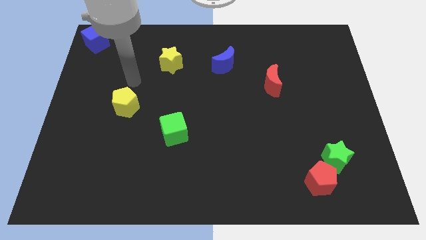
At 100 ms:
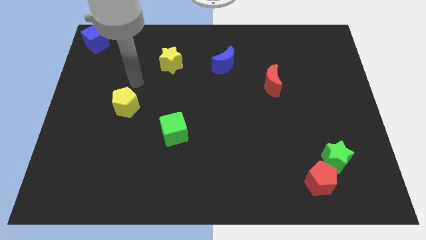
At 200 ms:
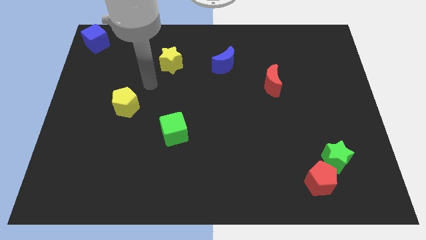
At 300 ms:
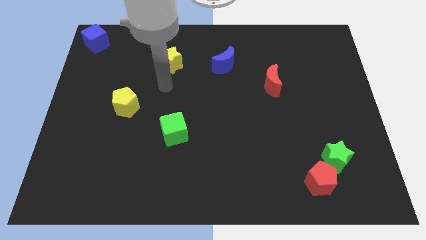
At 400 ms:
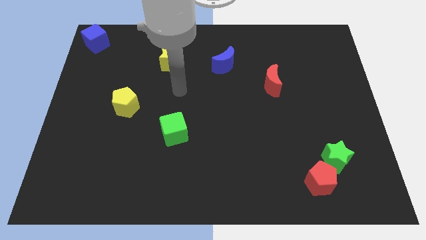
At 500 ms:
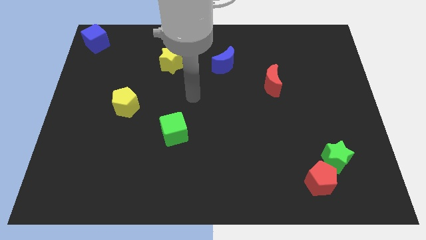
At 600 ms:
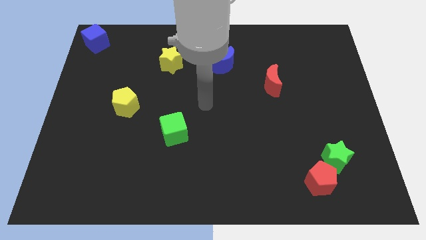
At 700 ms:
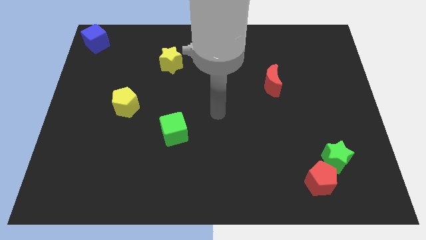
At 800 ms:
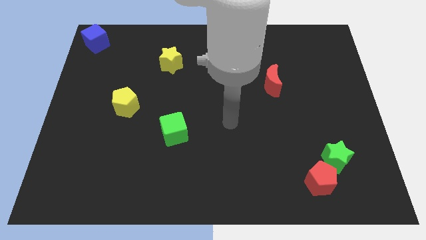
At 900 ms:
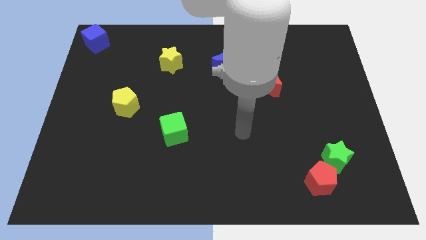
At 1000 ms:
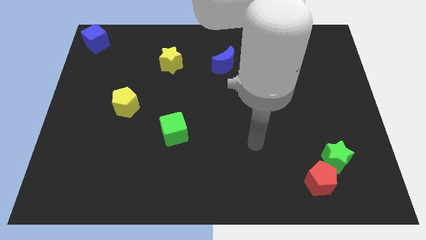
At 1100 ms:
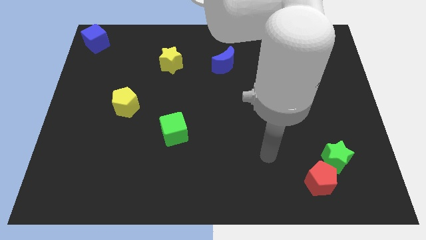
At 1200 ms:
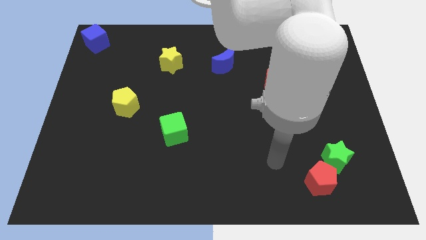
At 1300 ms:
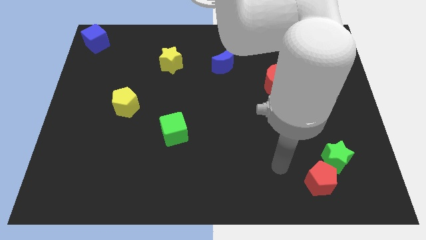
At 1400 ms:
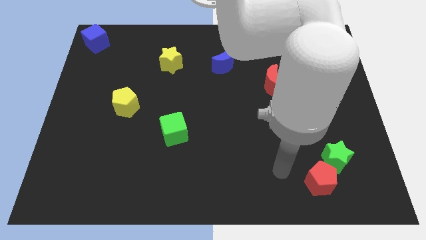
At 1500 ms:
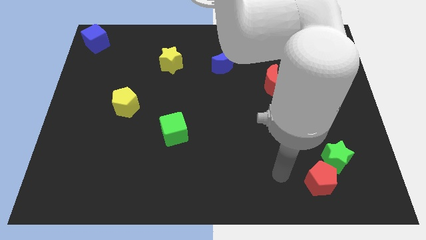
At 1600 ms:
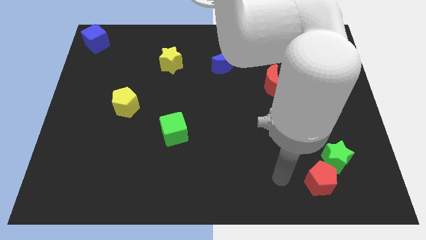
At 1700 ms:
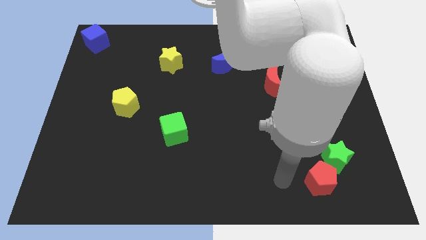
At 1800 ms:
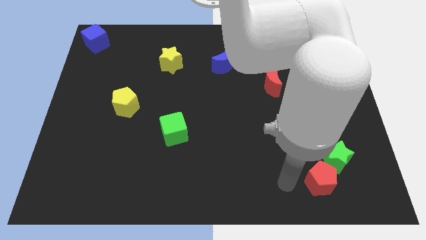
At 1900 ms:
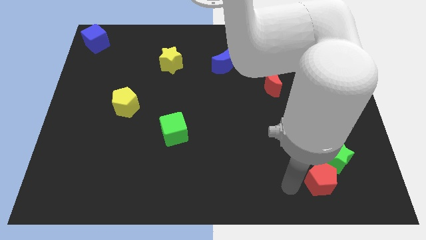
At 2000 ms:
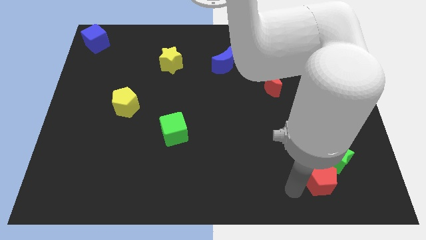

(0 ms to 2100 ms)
point your arm at the left side of the red pentagon

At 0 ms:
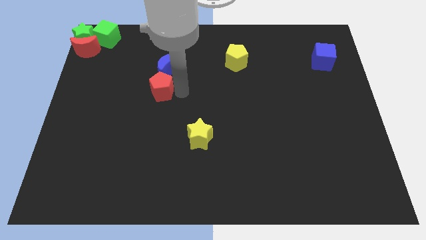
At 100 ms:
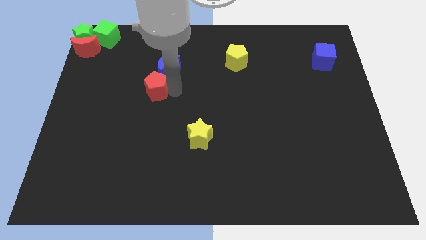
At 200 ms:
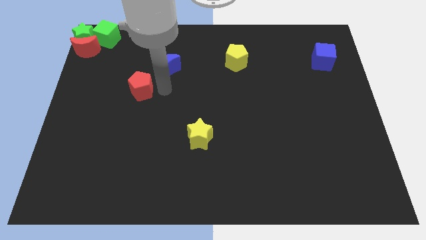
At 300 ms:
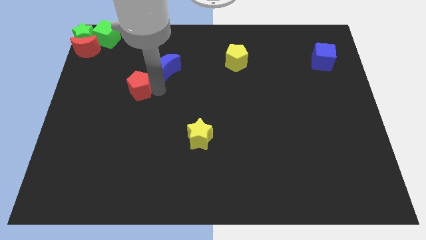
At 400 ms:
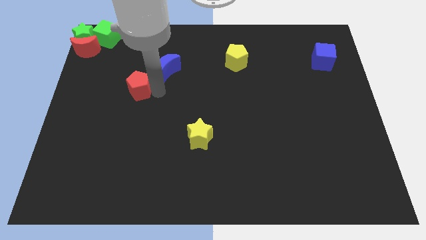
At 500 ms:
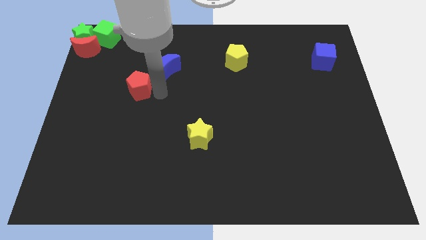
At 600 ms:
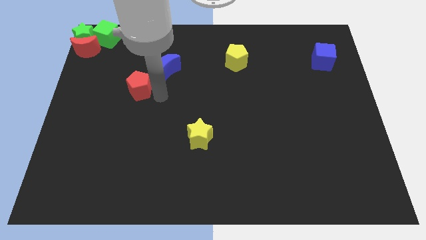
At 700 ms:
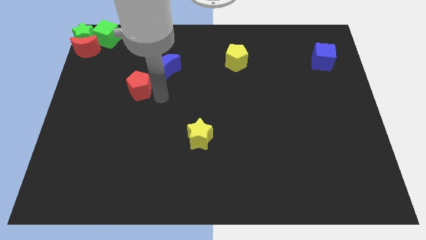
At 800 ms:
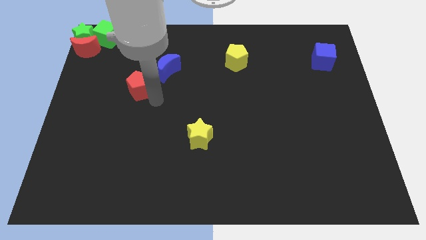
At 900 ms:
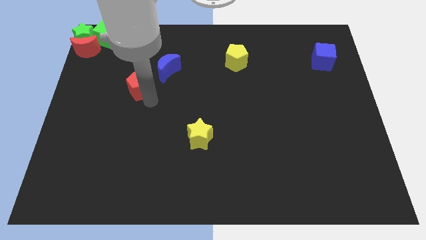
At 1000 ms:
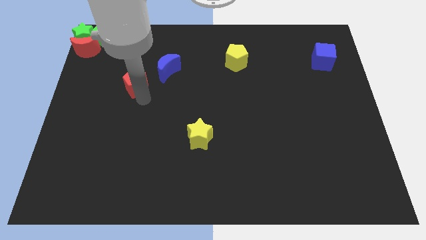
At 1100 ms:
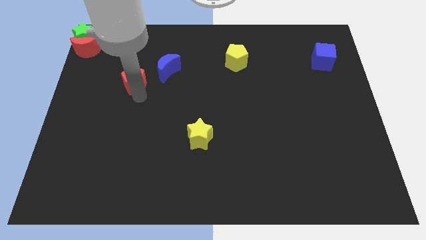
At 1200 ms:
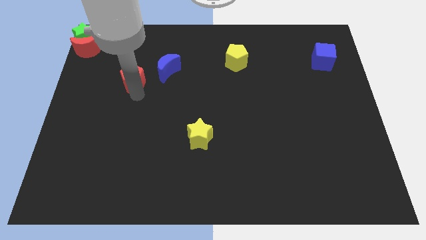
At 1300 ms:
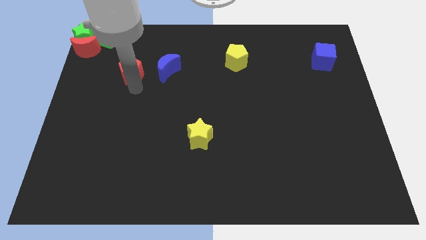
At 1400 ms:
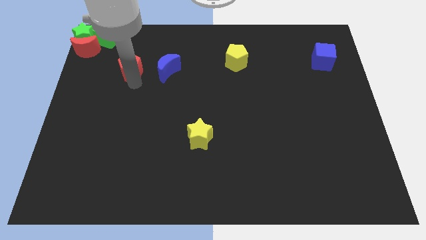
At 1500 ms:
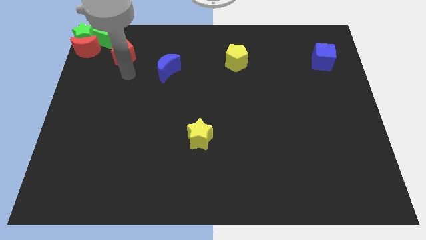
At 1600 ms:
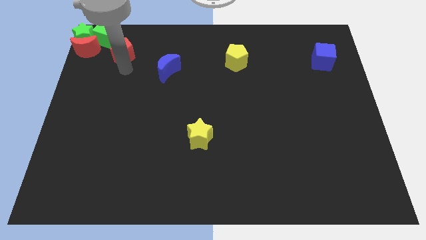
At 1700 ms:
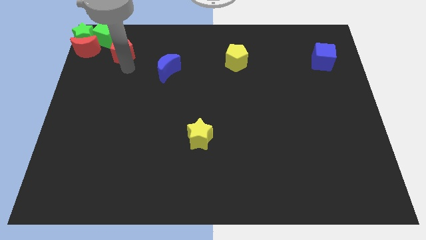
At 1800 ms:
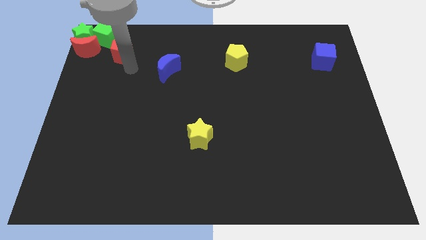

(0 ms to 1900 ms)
place the red pentagon into the group of blocks

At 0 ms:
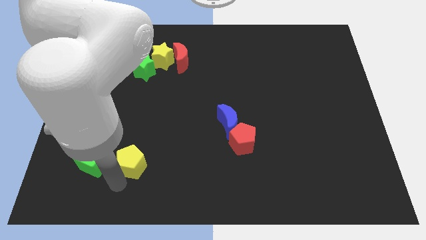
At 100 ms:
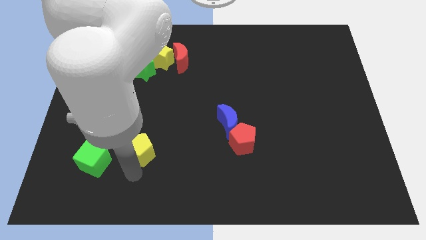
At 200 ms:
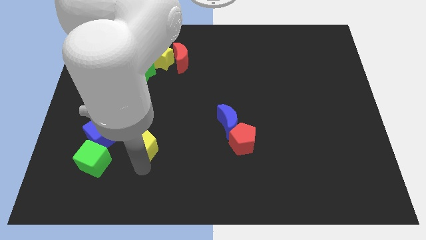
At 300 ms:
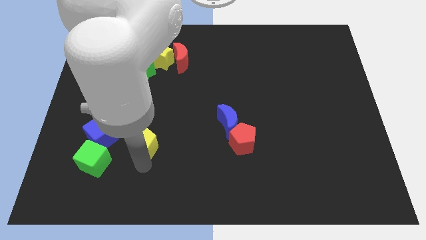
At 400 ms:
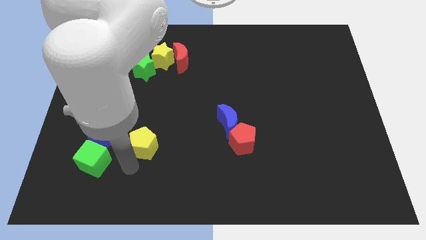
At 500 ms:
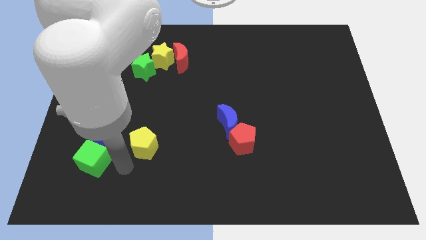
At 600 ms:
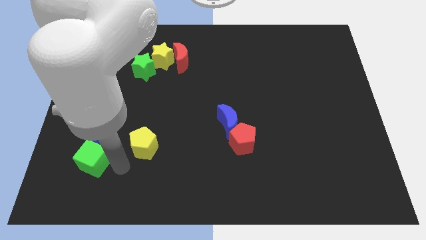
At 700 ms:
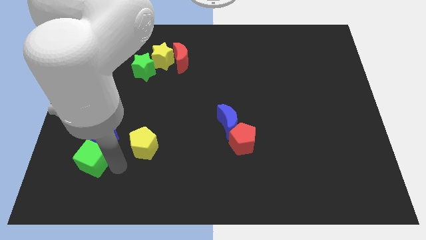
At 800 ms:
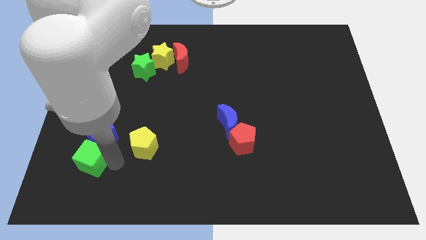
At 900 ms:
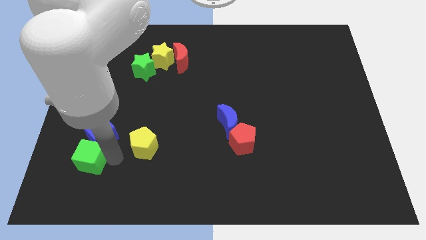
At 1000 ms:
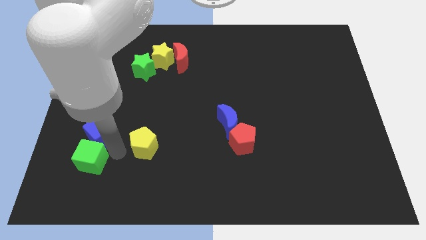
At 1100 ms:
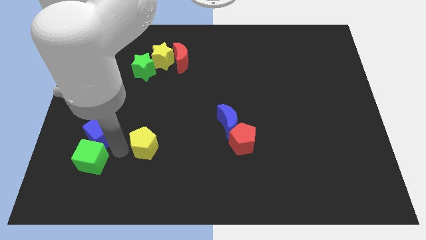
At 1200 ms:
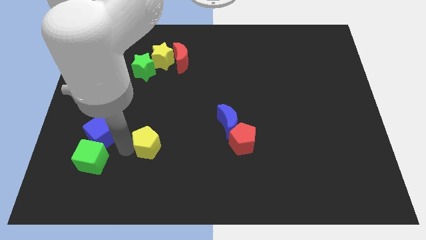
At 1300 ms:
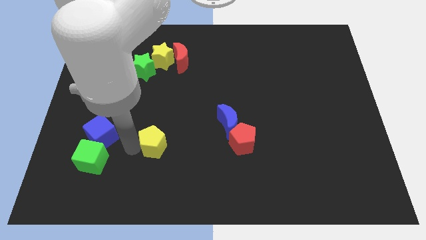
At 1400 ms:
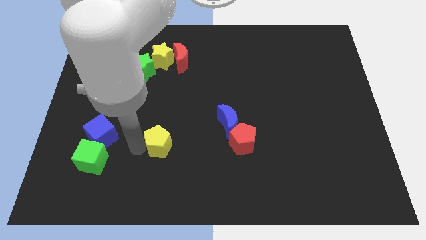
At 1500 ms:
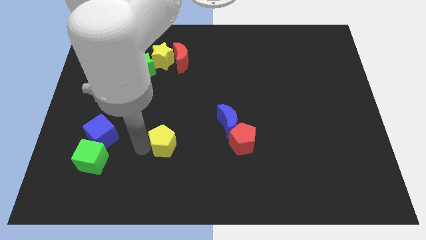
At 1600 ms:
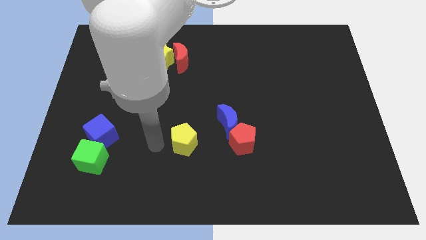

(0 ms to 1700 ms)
put the yellow pentagon horizontally in between the red pentagon and blue cube

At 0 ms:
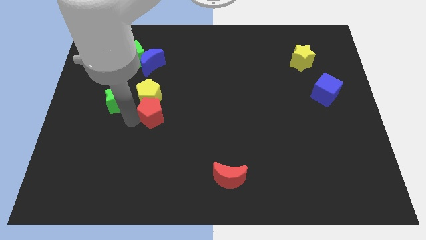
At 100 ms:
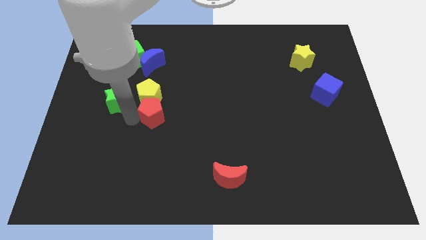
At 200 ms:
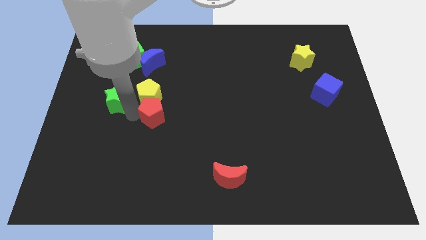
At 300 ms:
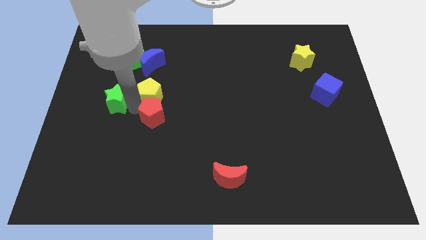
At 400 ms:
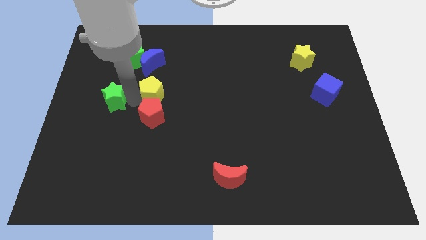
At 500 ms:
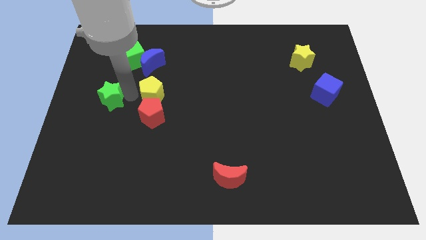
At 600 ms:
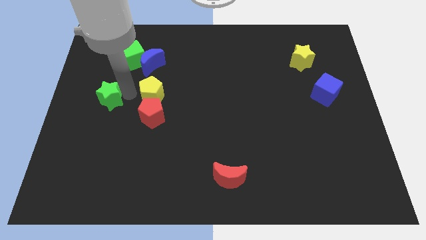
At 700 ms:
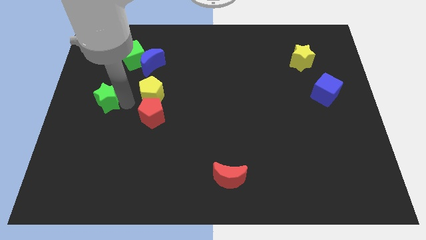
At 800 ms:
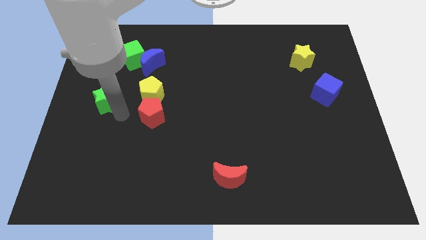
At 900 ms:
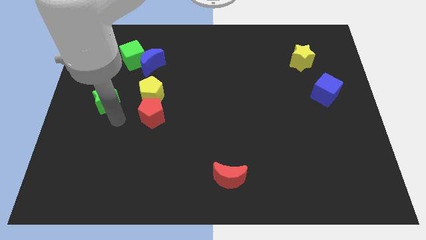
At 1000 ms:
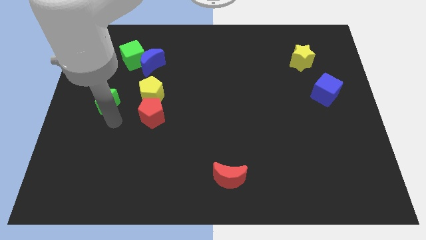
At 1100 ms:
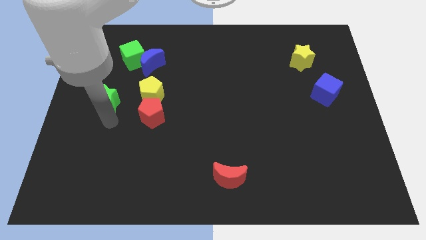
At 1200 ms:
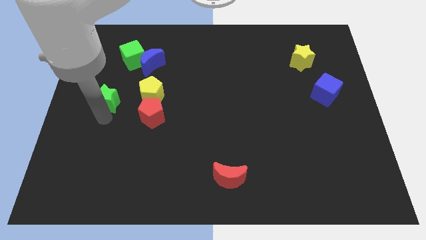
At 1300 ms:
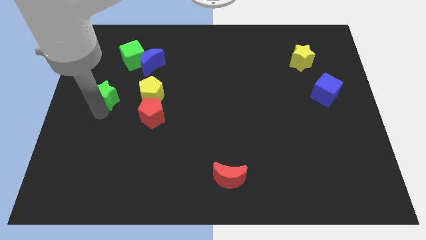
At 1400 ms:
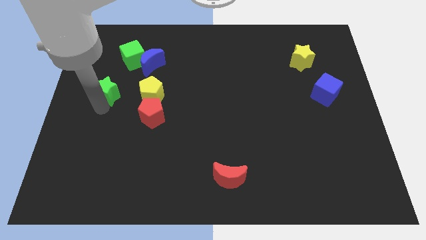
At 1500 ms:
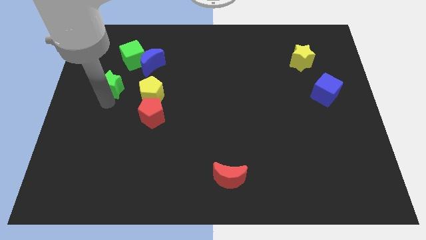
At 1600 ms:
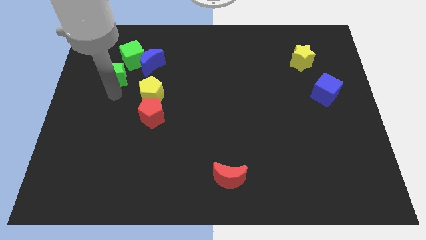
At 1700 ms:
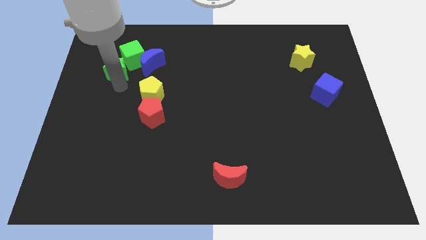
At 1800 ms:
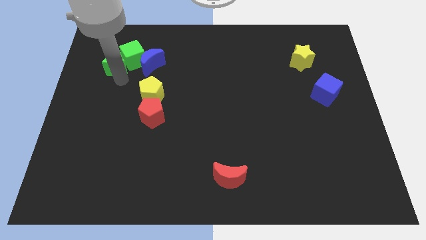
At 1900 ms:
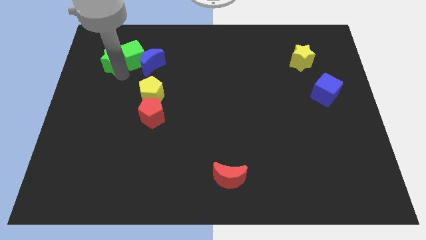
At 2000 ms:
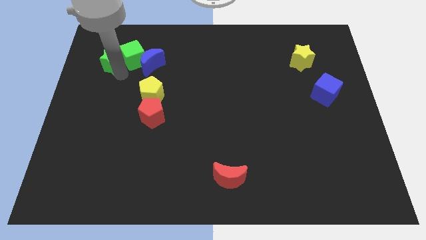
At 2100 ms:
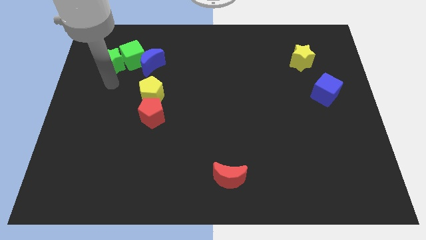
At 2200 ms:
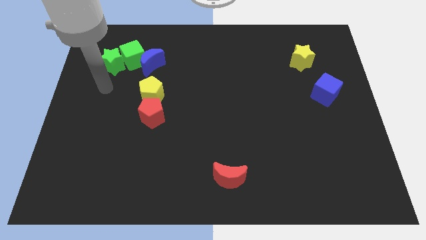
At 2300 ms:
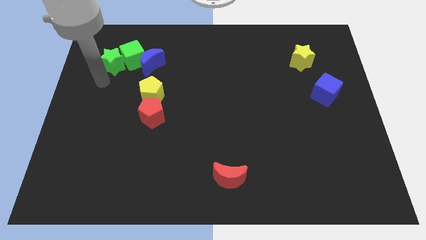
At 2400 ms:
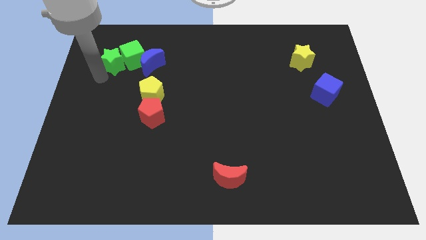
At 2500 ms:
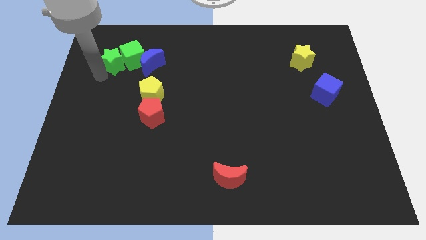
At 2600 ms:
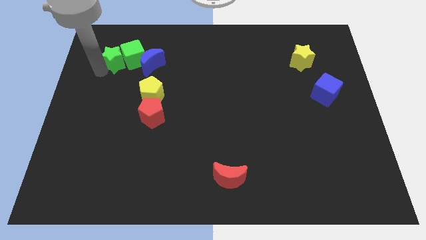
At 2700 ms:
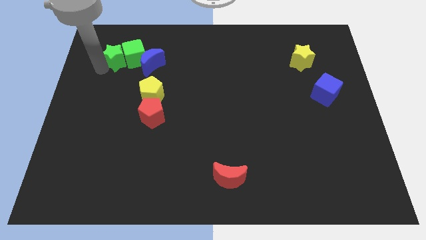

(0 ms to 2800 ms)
push the green star to the left of the green cube

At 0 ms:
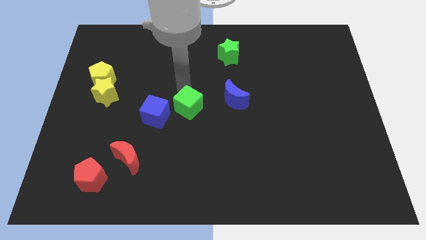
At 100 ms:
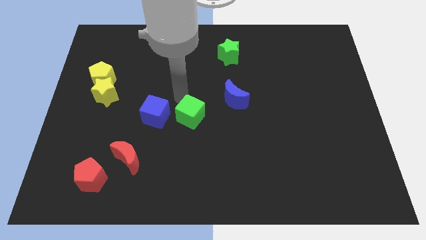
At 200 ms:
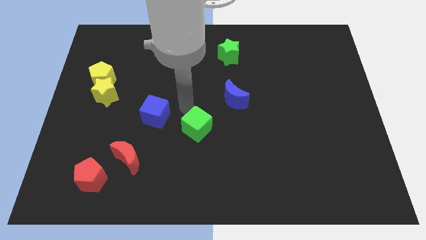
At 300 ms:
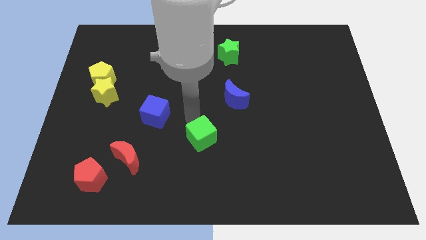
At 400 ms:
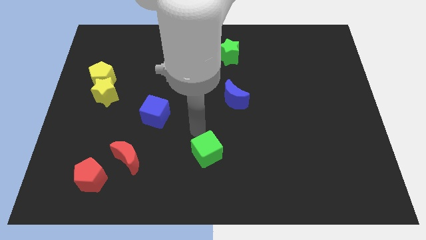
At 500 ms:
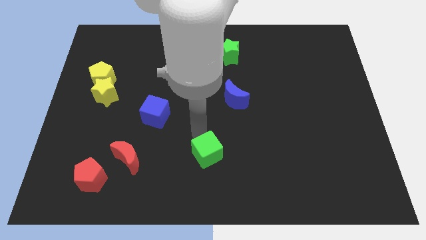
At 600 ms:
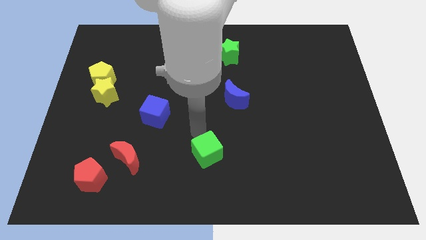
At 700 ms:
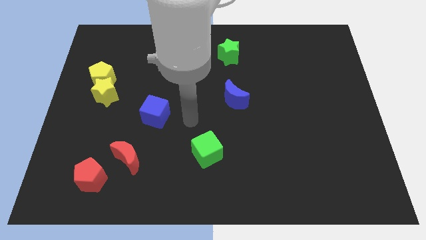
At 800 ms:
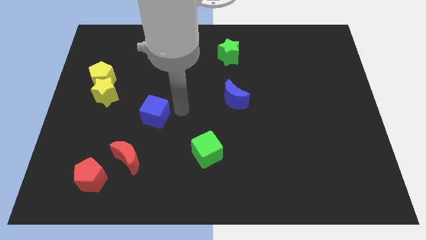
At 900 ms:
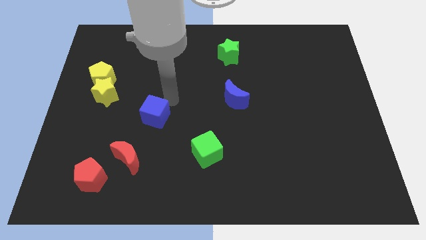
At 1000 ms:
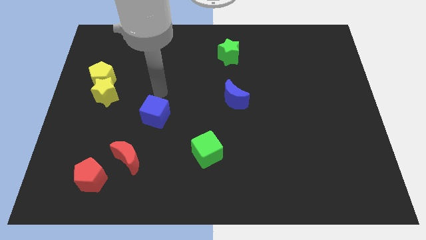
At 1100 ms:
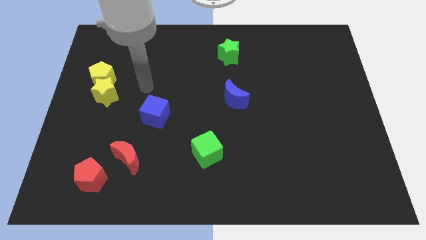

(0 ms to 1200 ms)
slide the green cube towards the bottom
